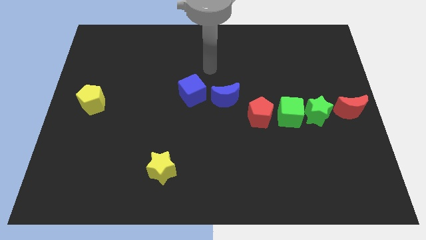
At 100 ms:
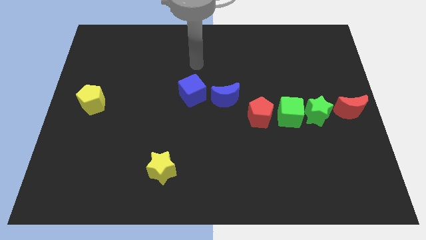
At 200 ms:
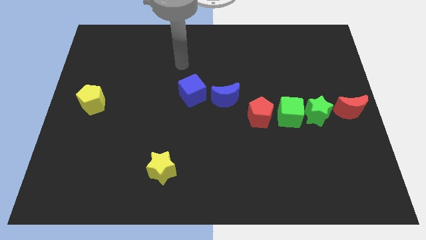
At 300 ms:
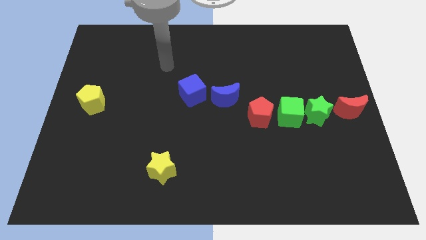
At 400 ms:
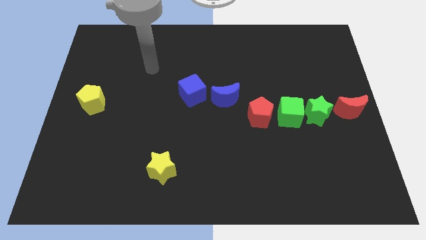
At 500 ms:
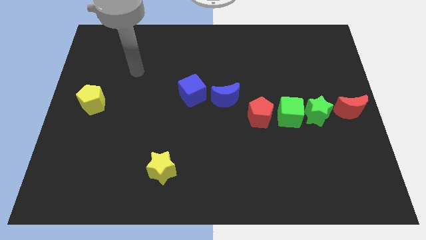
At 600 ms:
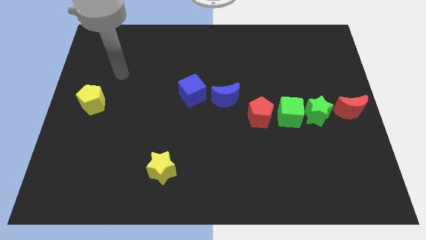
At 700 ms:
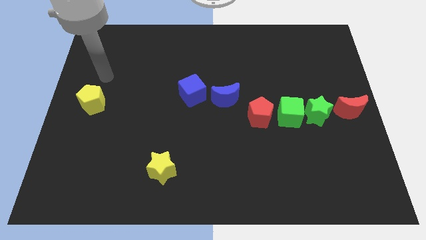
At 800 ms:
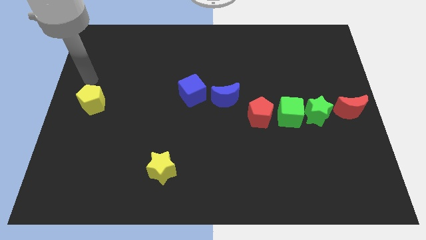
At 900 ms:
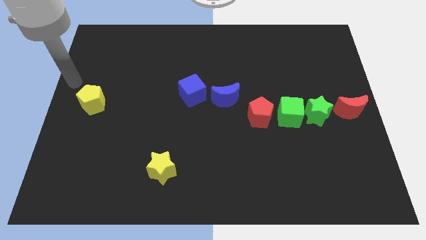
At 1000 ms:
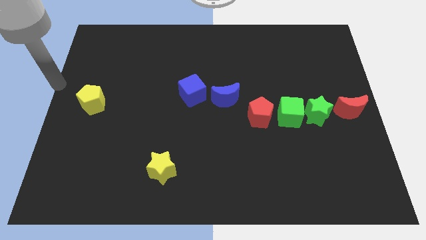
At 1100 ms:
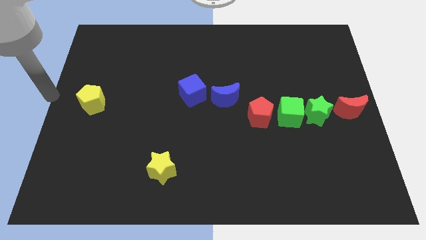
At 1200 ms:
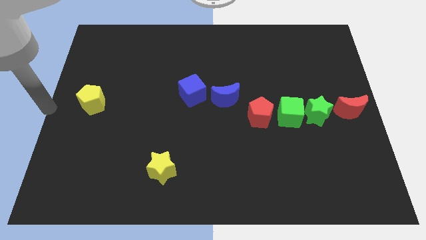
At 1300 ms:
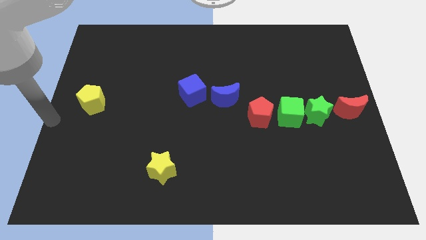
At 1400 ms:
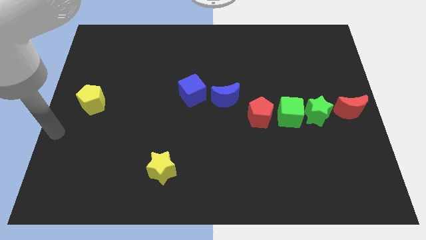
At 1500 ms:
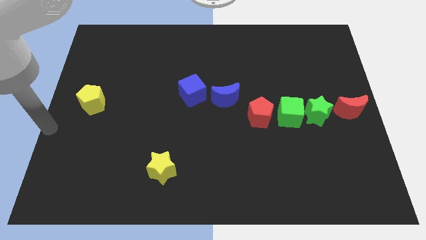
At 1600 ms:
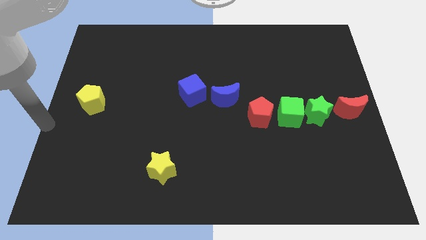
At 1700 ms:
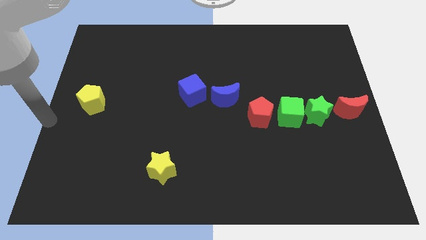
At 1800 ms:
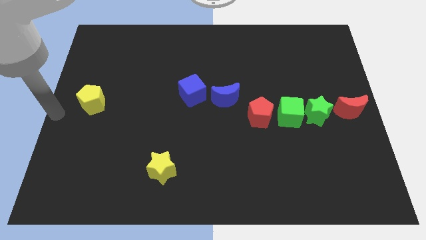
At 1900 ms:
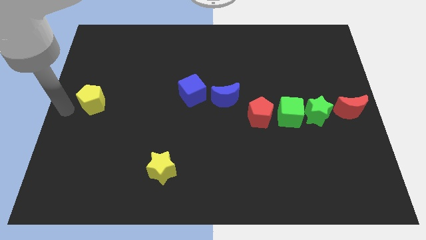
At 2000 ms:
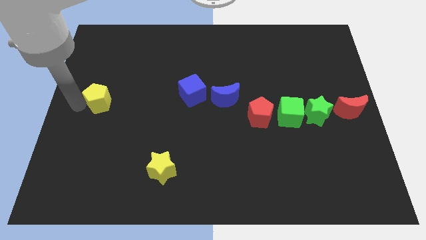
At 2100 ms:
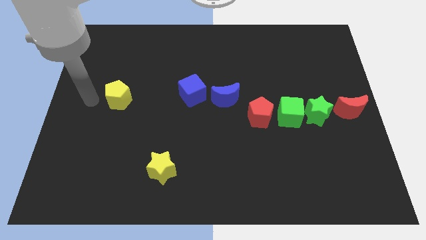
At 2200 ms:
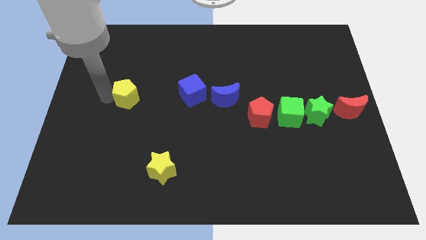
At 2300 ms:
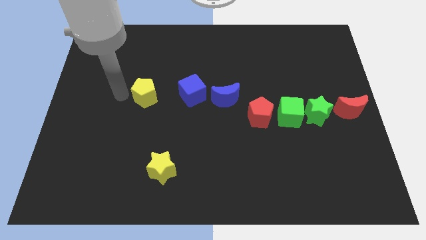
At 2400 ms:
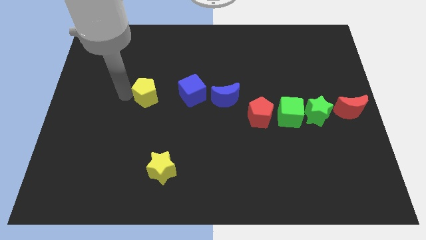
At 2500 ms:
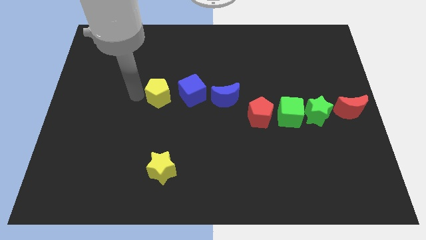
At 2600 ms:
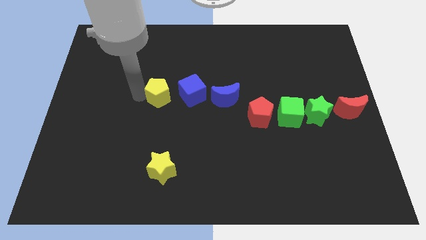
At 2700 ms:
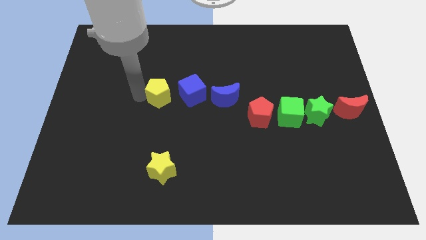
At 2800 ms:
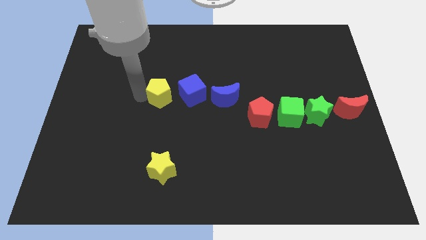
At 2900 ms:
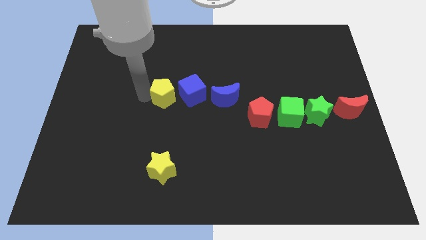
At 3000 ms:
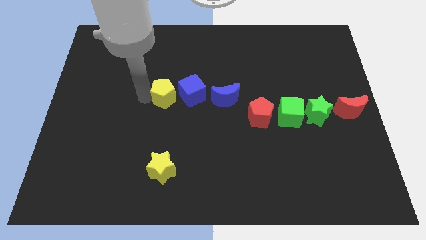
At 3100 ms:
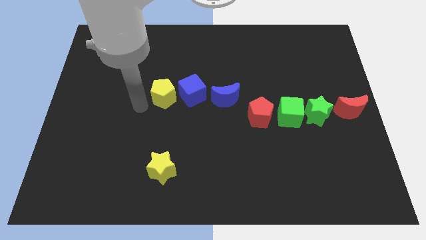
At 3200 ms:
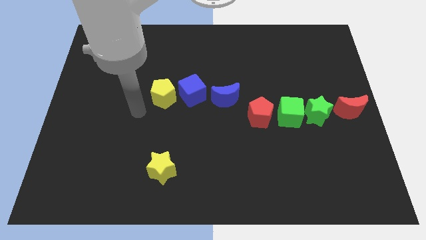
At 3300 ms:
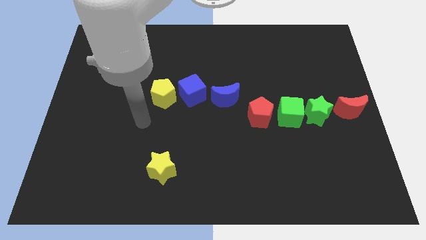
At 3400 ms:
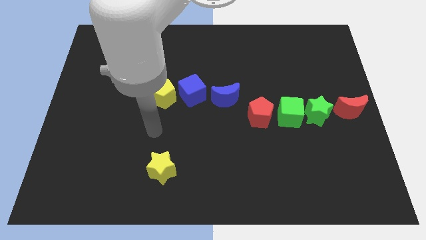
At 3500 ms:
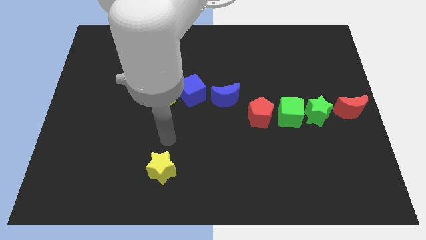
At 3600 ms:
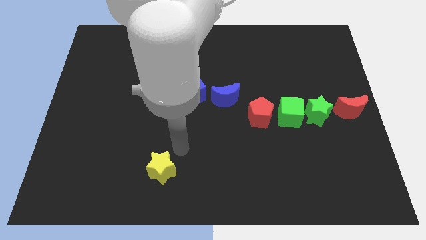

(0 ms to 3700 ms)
move the yellow pentagon to the left of blue cube

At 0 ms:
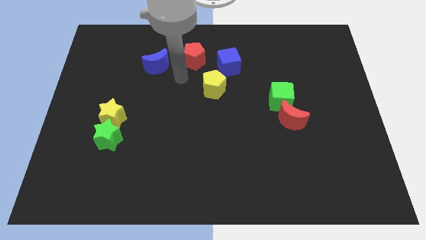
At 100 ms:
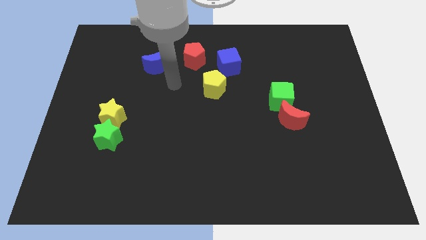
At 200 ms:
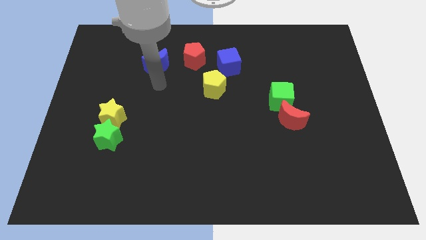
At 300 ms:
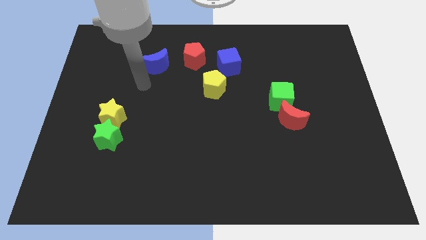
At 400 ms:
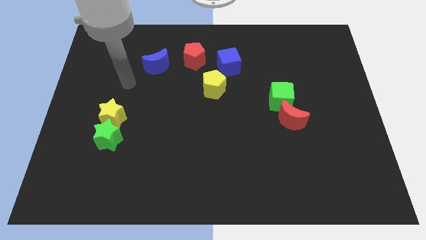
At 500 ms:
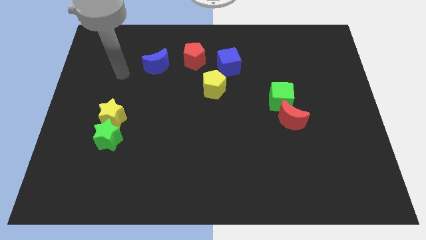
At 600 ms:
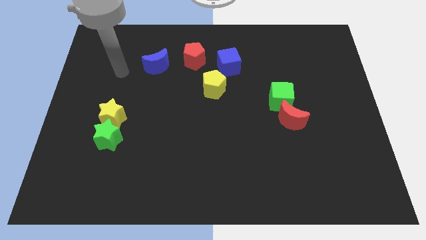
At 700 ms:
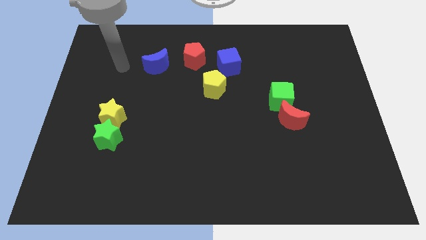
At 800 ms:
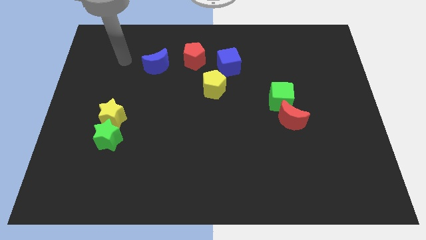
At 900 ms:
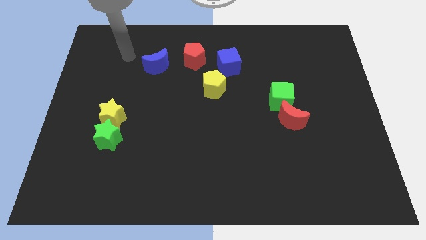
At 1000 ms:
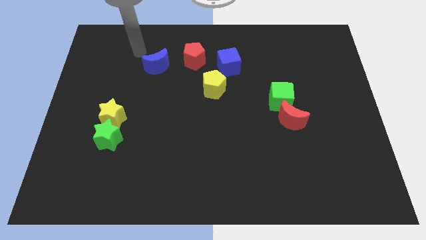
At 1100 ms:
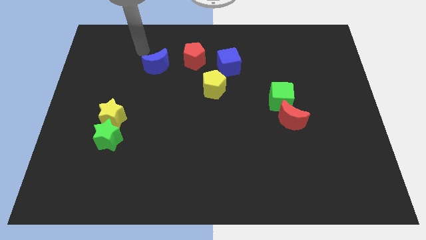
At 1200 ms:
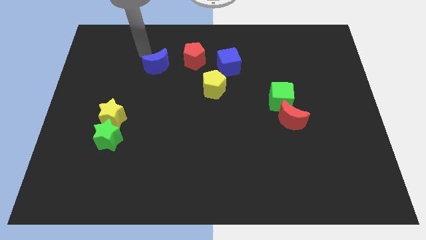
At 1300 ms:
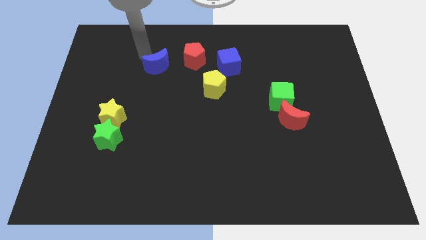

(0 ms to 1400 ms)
move your arm close to the blue moon

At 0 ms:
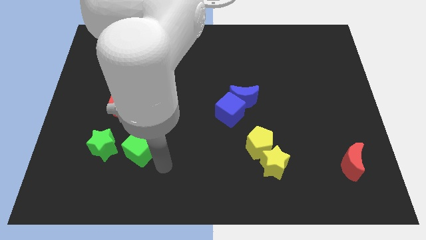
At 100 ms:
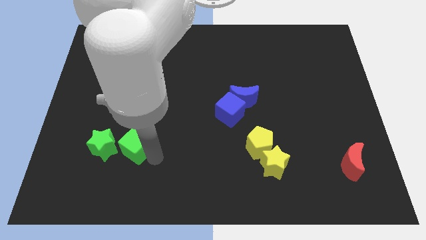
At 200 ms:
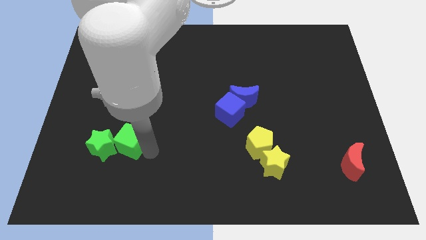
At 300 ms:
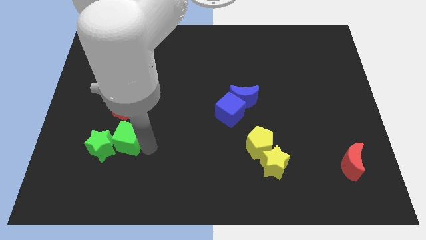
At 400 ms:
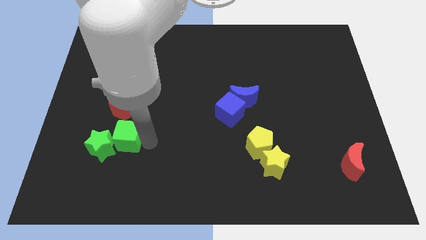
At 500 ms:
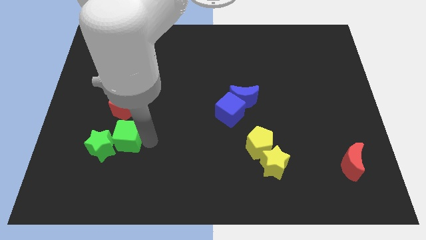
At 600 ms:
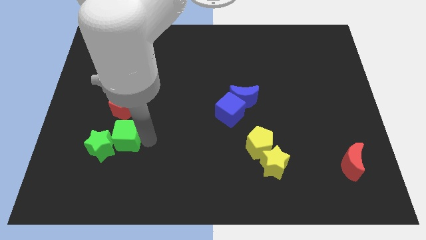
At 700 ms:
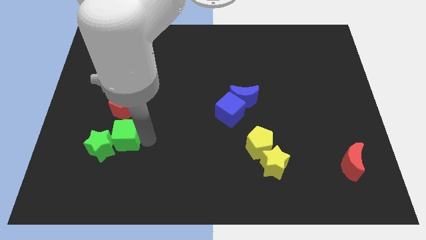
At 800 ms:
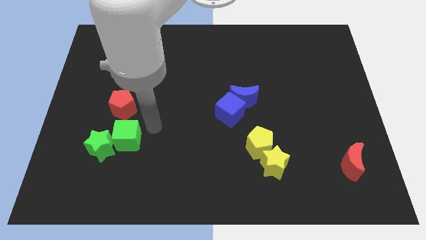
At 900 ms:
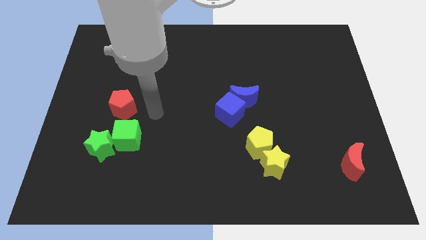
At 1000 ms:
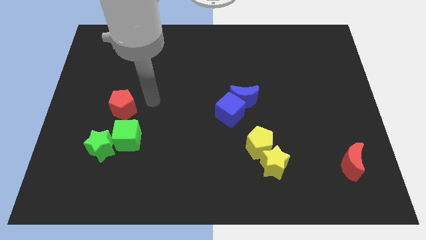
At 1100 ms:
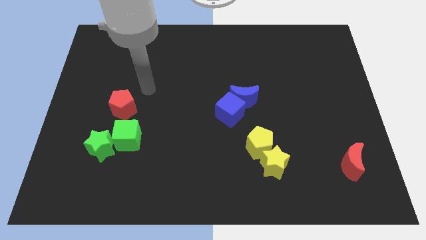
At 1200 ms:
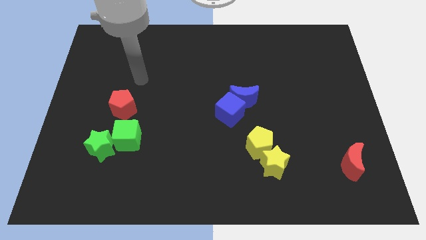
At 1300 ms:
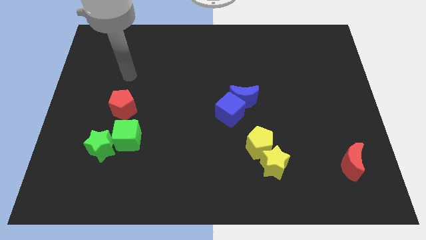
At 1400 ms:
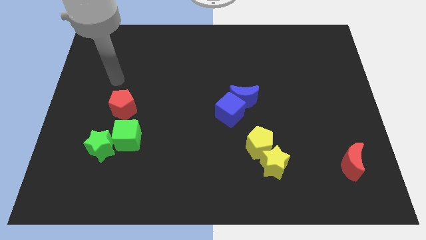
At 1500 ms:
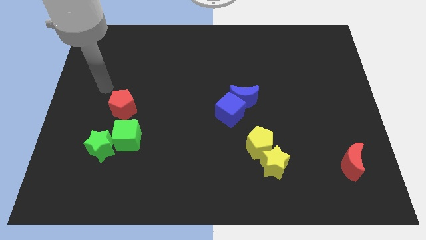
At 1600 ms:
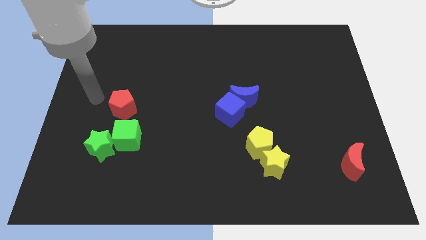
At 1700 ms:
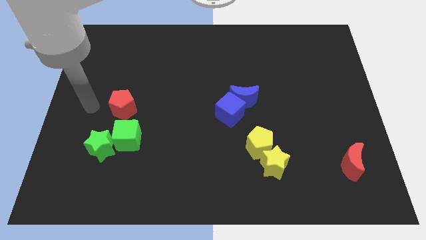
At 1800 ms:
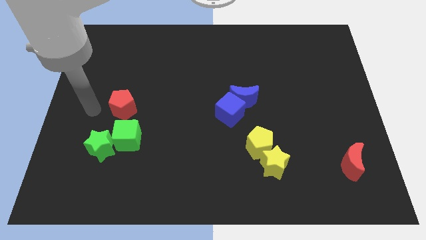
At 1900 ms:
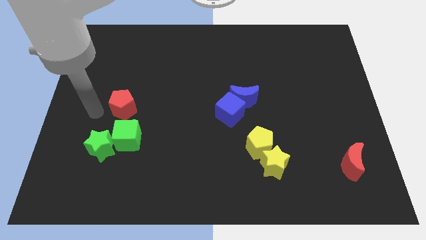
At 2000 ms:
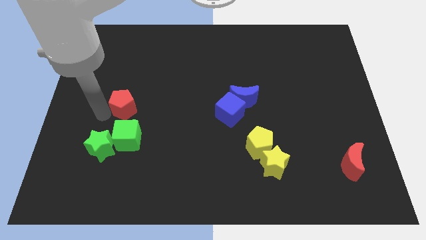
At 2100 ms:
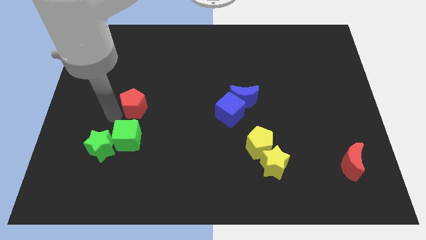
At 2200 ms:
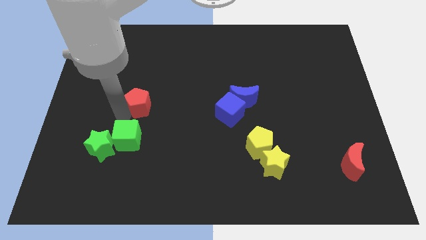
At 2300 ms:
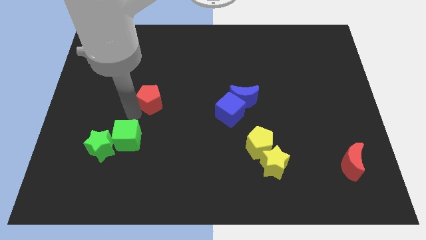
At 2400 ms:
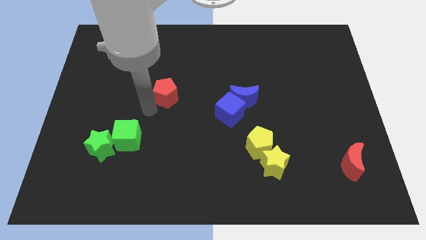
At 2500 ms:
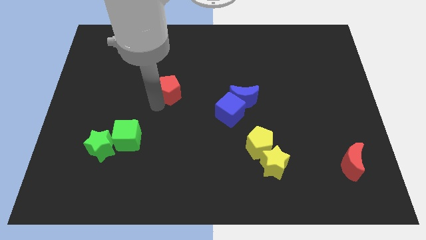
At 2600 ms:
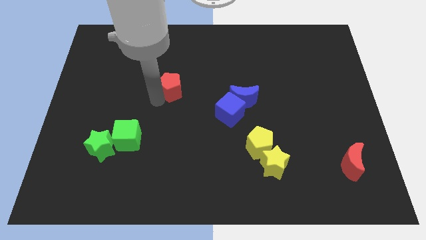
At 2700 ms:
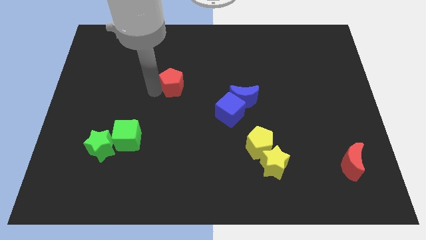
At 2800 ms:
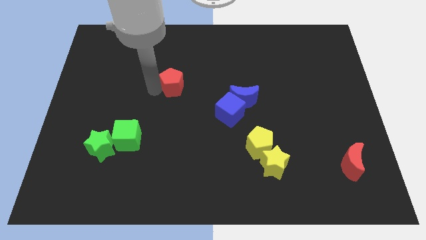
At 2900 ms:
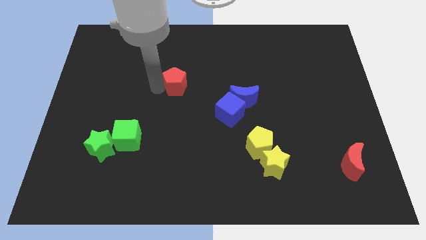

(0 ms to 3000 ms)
separate red pentagon from green blocks

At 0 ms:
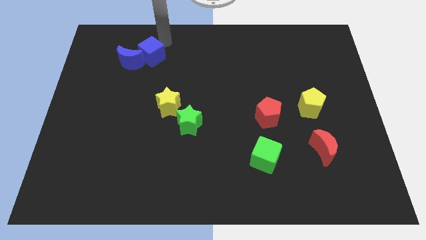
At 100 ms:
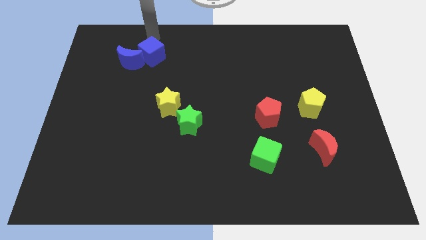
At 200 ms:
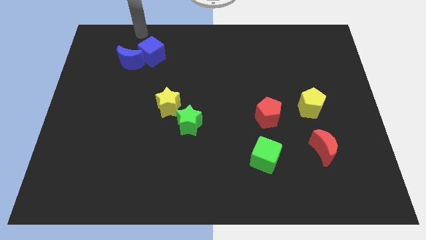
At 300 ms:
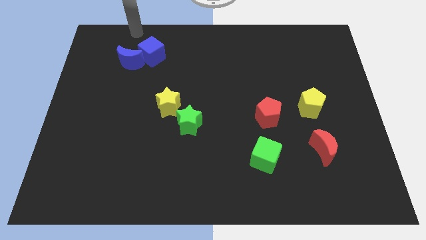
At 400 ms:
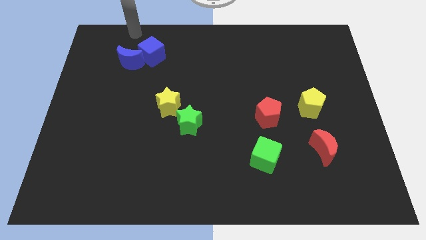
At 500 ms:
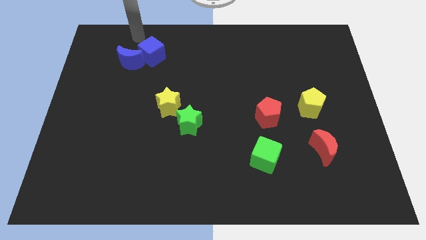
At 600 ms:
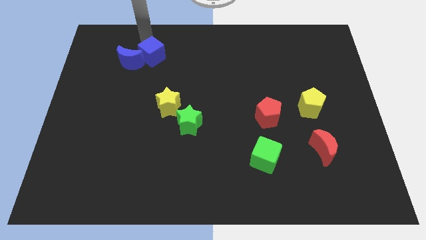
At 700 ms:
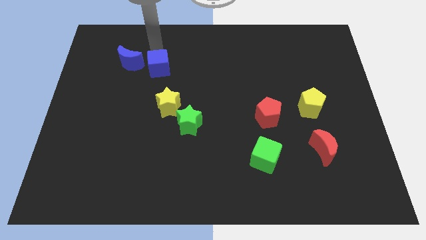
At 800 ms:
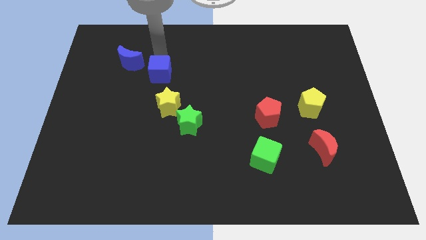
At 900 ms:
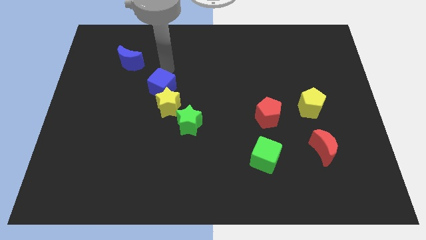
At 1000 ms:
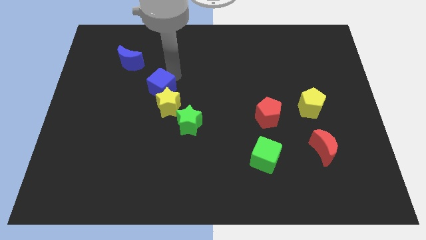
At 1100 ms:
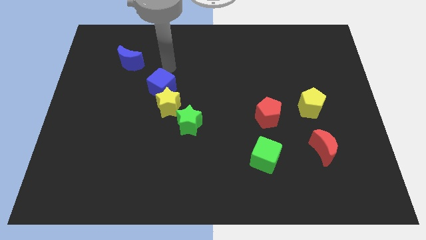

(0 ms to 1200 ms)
separate blue cube from blue moon
